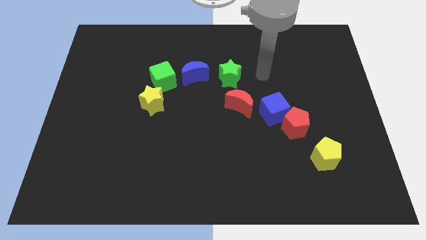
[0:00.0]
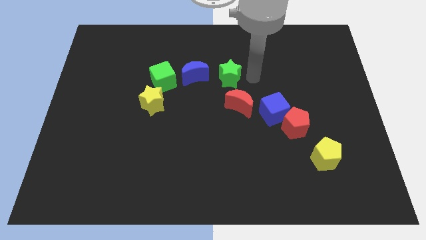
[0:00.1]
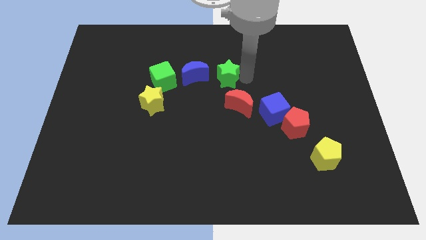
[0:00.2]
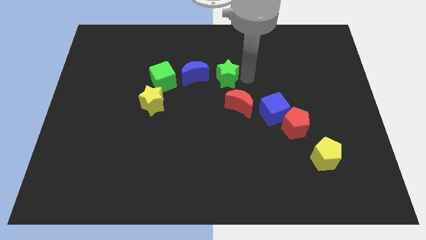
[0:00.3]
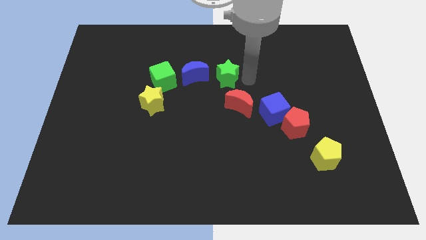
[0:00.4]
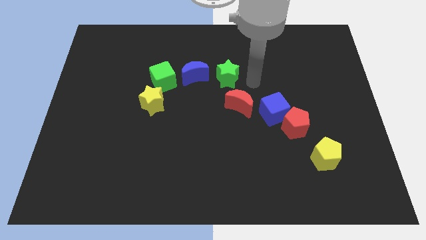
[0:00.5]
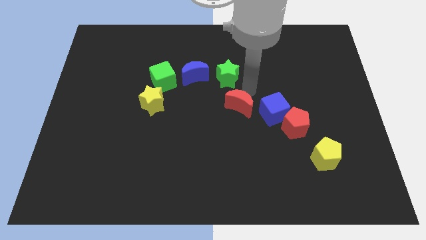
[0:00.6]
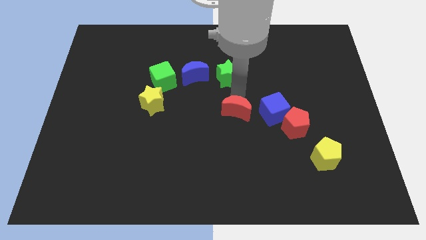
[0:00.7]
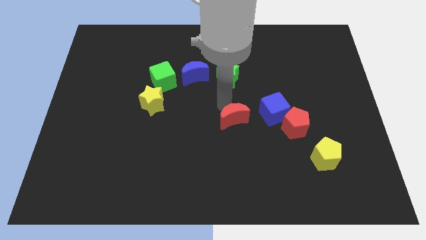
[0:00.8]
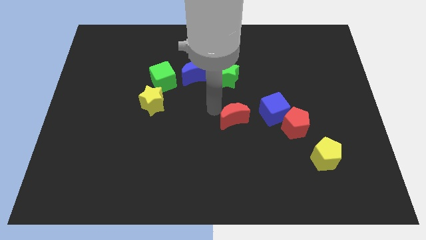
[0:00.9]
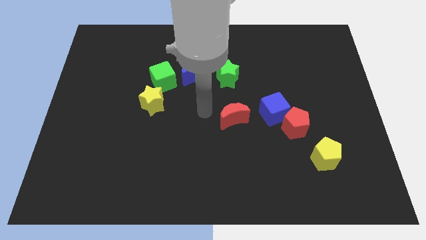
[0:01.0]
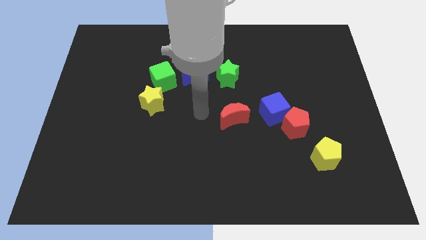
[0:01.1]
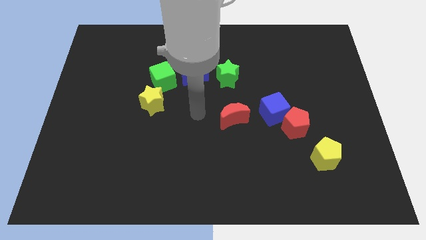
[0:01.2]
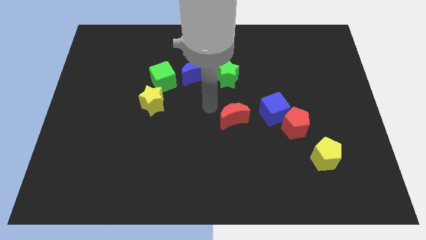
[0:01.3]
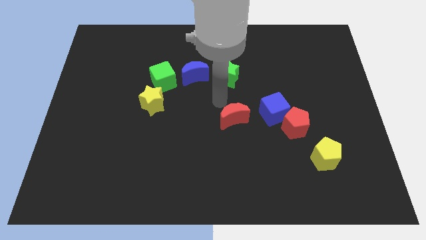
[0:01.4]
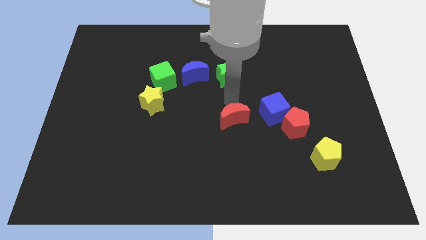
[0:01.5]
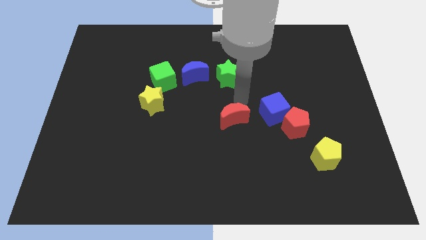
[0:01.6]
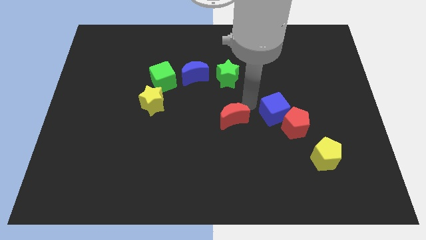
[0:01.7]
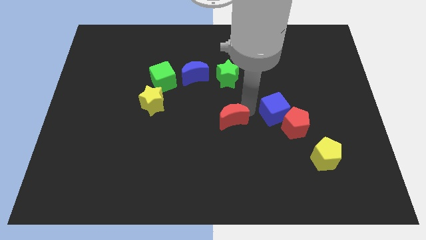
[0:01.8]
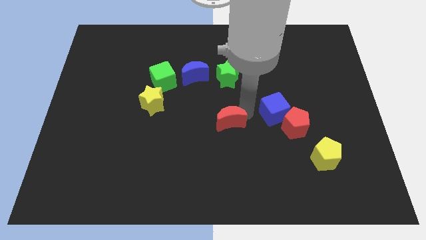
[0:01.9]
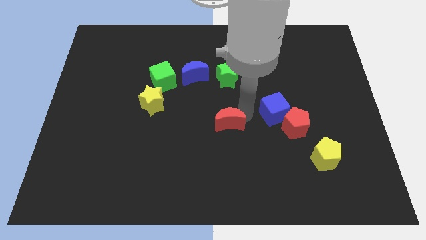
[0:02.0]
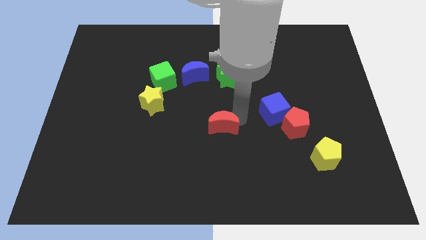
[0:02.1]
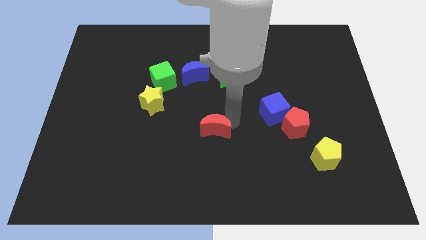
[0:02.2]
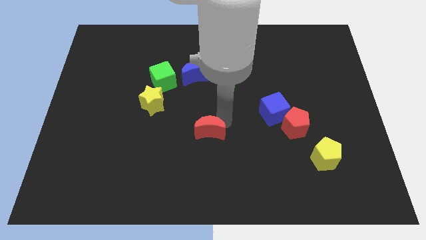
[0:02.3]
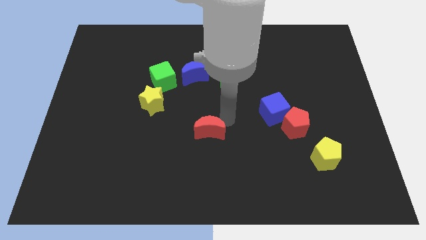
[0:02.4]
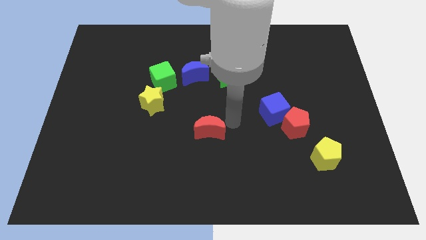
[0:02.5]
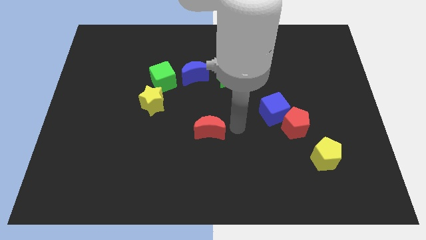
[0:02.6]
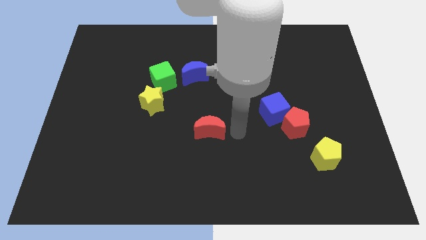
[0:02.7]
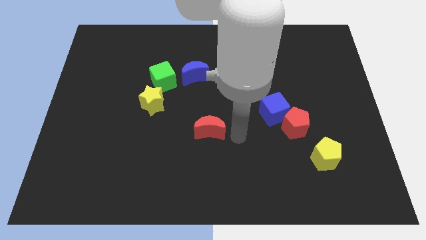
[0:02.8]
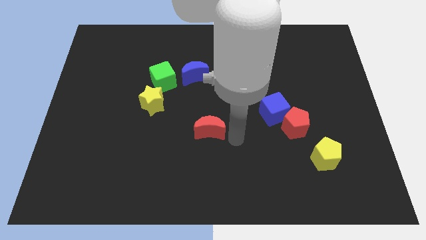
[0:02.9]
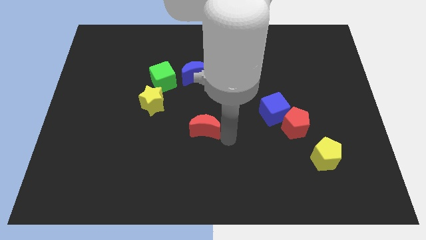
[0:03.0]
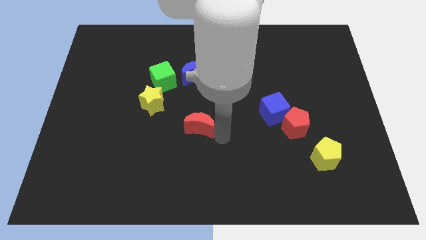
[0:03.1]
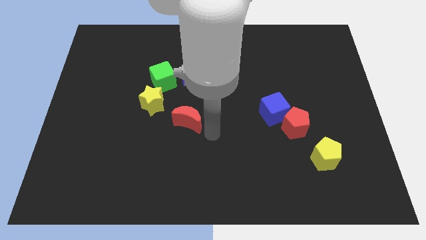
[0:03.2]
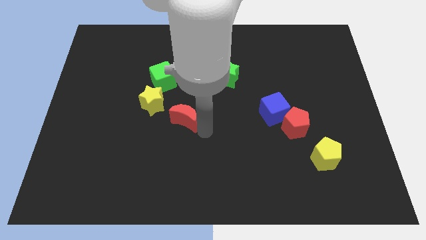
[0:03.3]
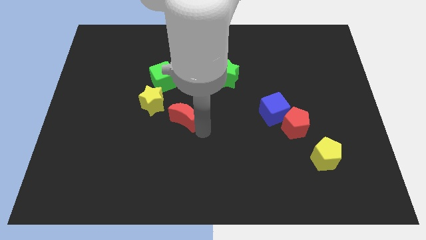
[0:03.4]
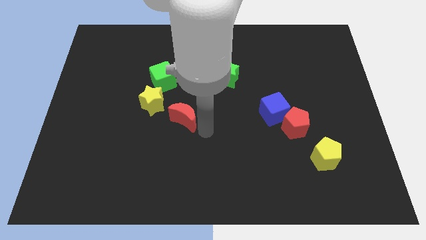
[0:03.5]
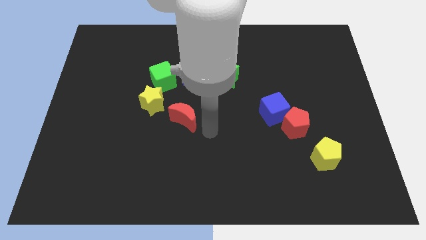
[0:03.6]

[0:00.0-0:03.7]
place the red moon bottom right to the yellow star

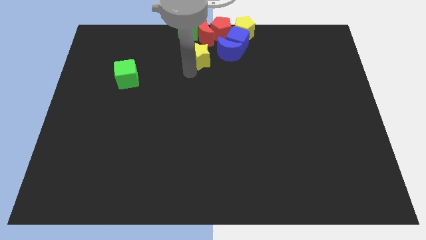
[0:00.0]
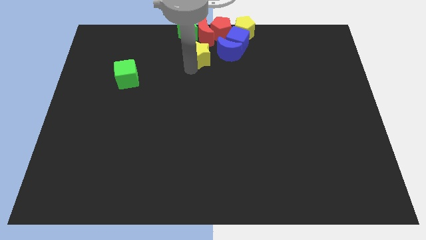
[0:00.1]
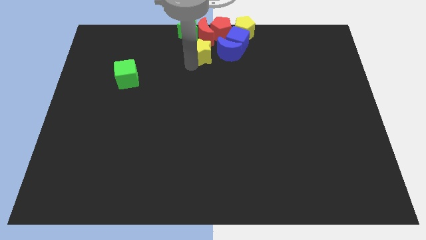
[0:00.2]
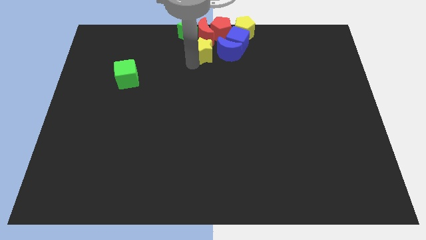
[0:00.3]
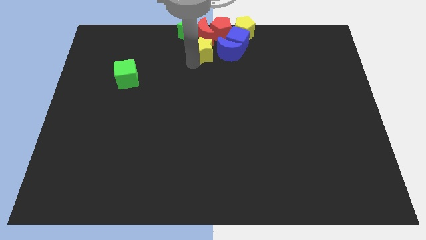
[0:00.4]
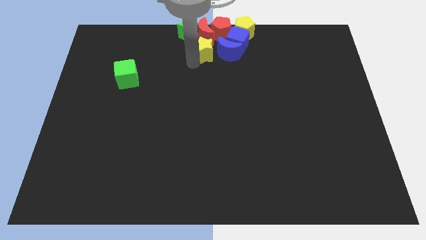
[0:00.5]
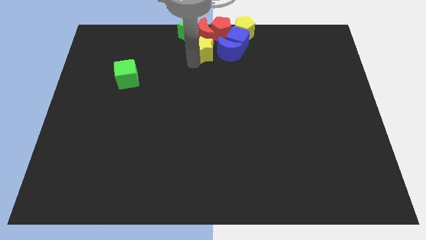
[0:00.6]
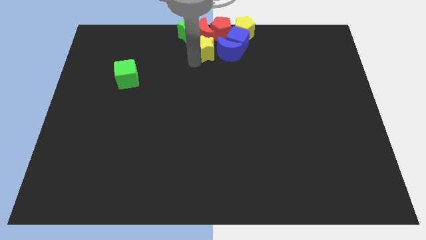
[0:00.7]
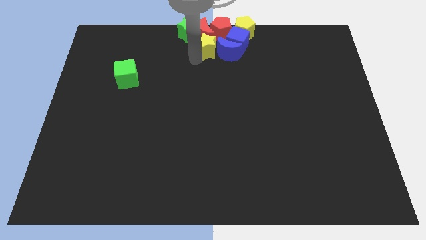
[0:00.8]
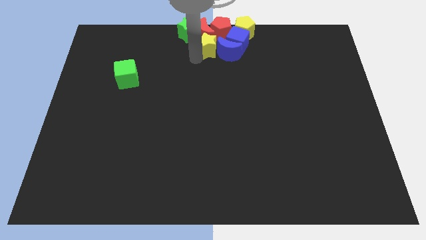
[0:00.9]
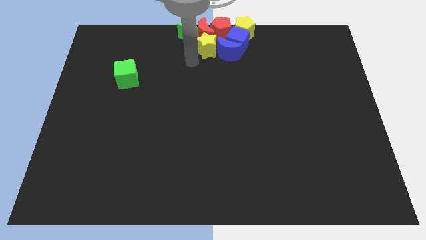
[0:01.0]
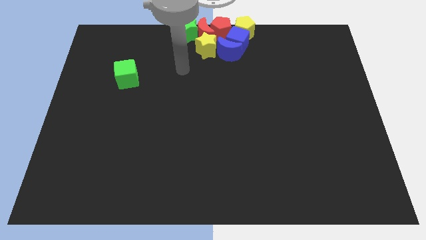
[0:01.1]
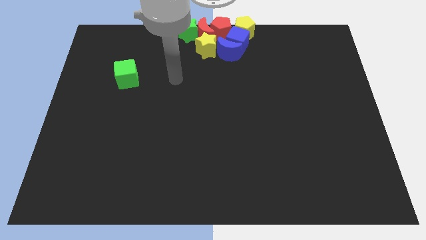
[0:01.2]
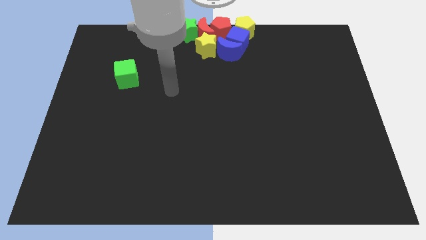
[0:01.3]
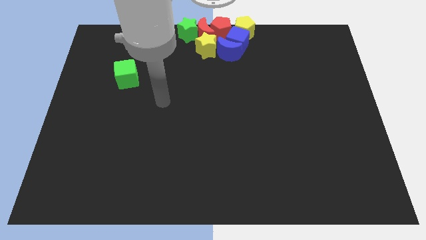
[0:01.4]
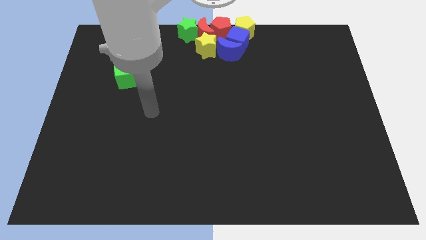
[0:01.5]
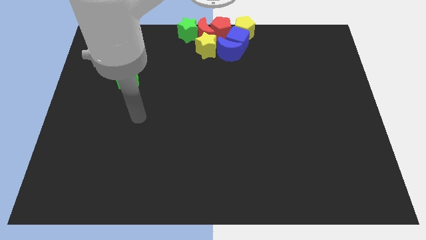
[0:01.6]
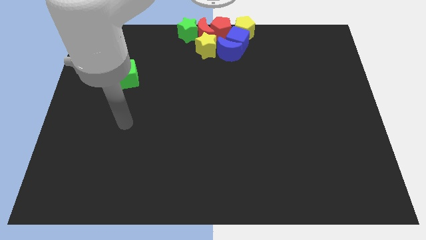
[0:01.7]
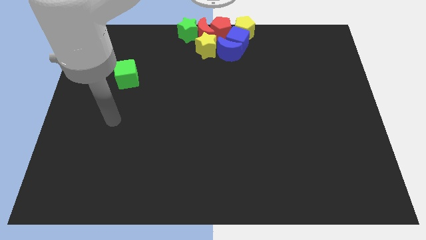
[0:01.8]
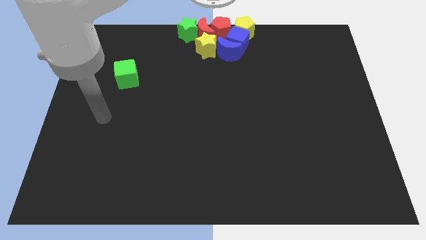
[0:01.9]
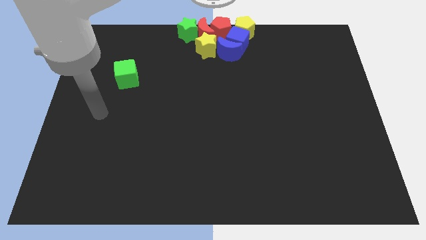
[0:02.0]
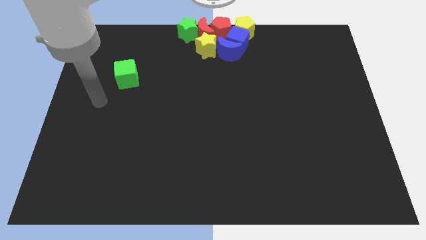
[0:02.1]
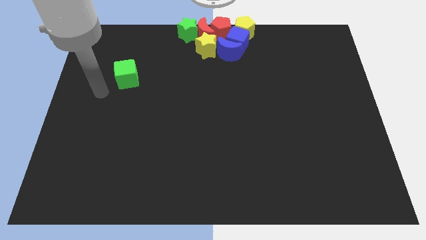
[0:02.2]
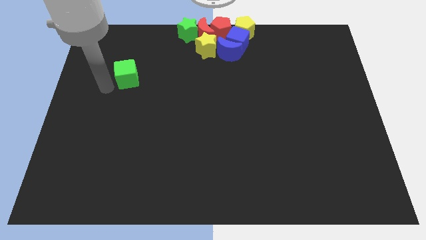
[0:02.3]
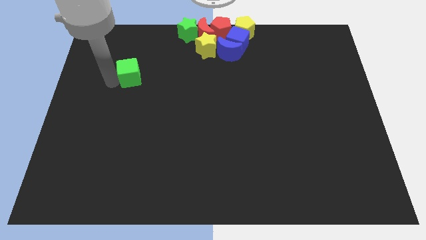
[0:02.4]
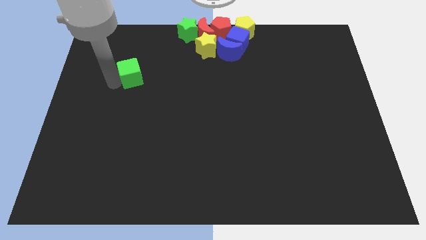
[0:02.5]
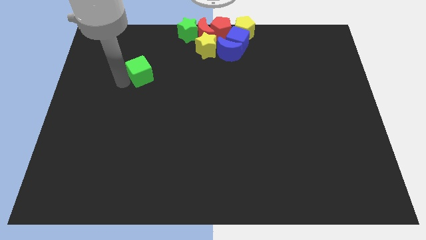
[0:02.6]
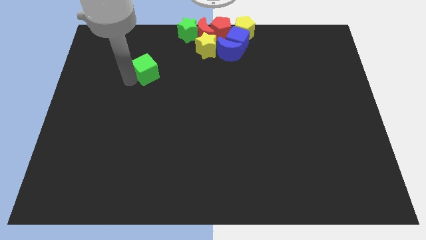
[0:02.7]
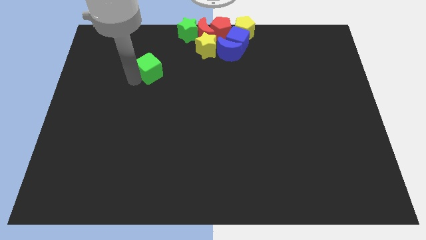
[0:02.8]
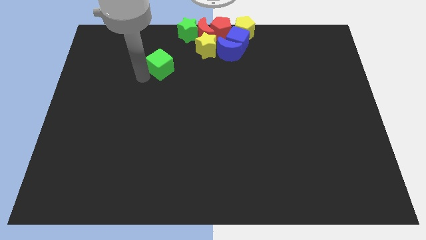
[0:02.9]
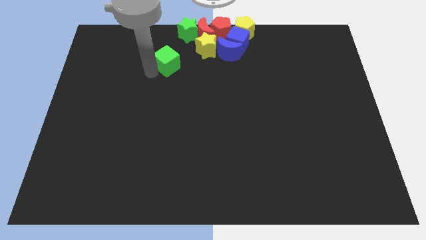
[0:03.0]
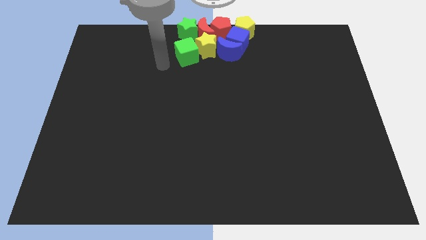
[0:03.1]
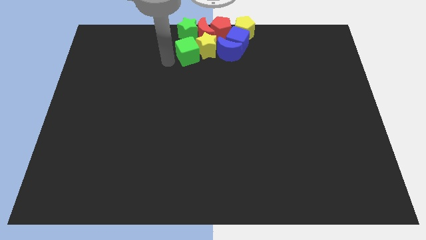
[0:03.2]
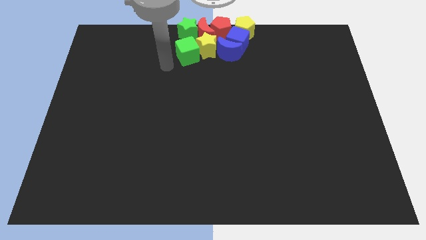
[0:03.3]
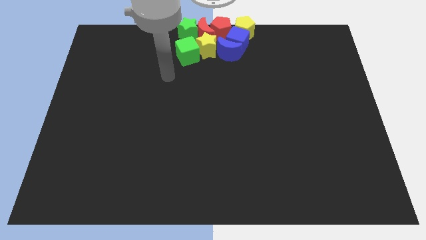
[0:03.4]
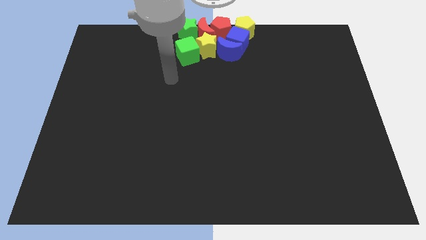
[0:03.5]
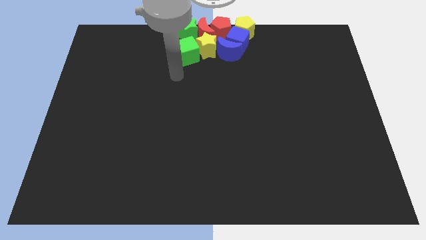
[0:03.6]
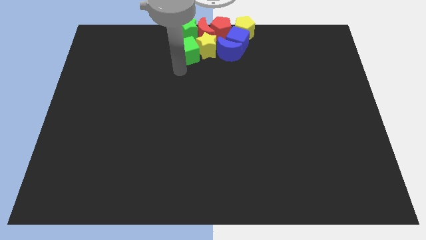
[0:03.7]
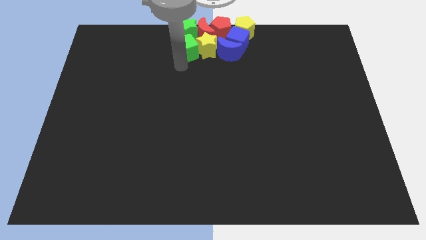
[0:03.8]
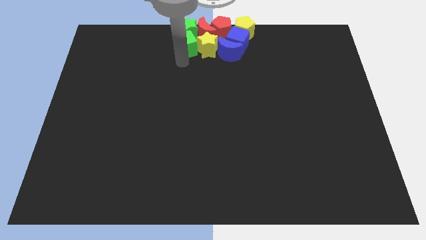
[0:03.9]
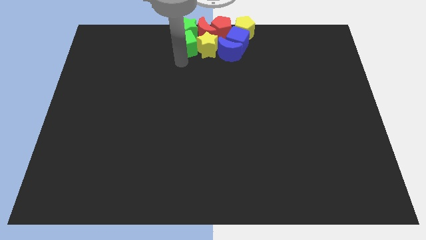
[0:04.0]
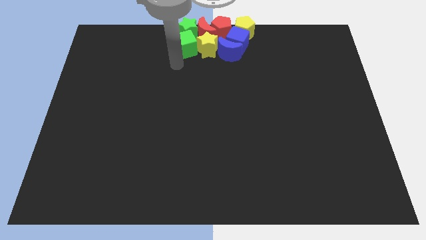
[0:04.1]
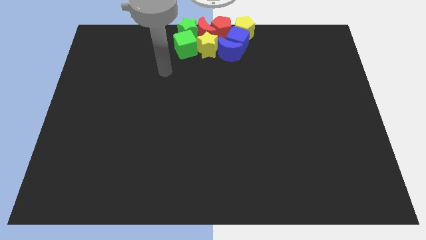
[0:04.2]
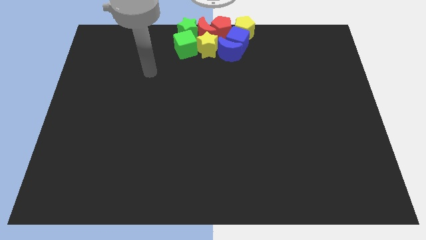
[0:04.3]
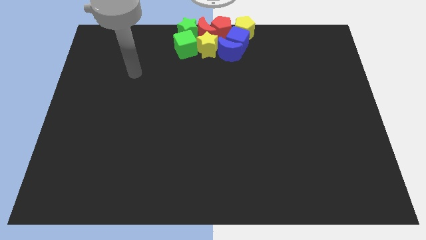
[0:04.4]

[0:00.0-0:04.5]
slide the green cube to the left of the yellow star

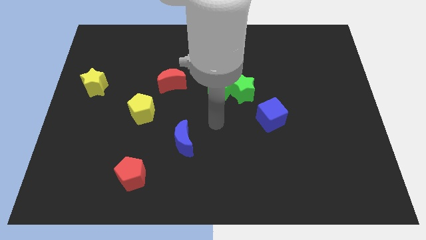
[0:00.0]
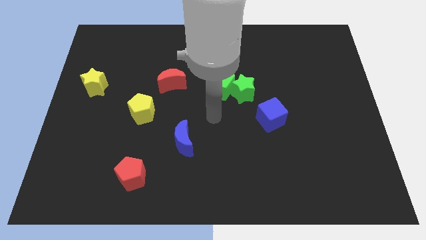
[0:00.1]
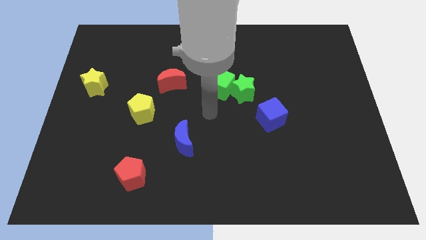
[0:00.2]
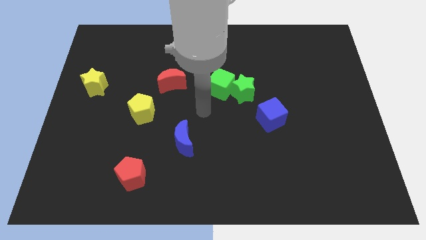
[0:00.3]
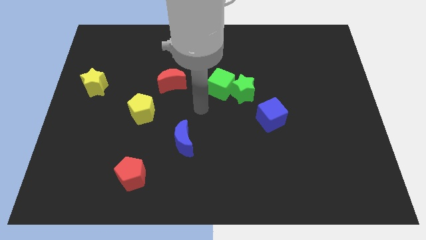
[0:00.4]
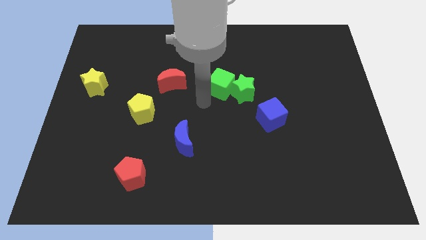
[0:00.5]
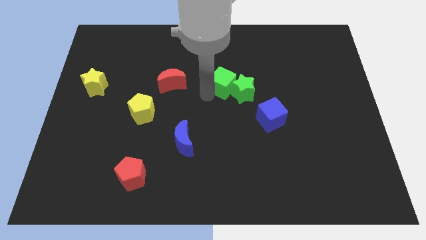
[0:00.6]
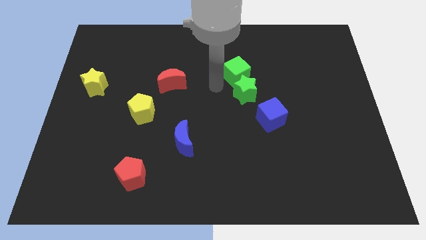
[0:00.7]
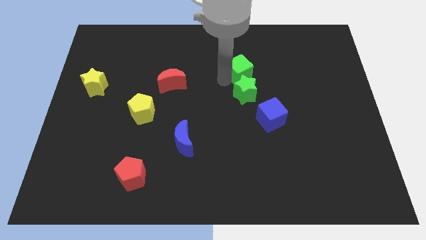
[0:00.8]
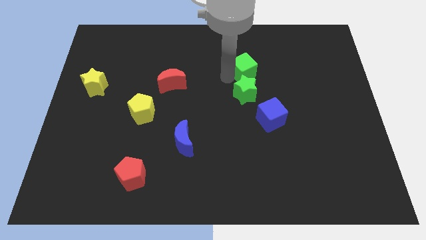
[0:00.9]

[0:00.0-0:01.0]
move the green cube upward right
